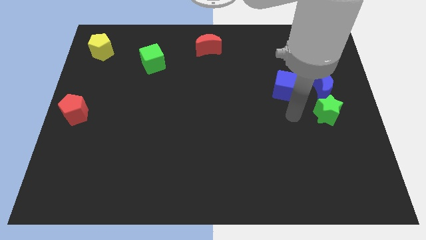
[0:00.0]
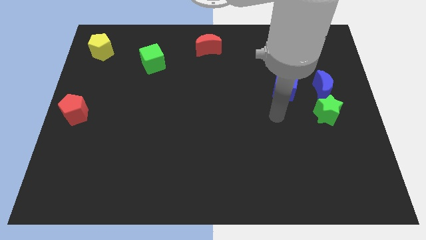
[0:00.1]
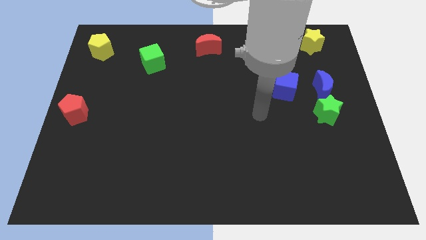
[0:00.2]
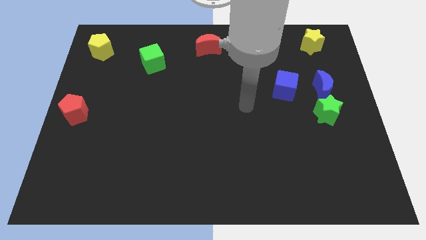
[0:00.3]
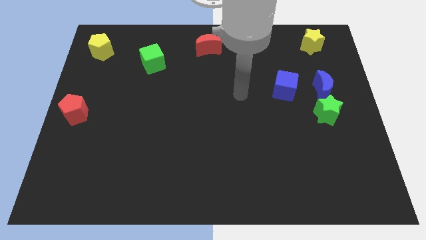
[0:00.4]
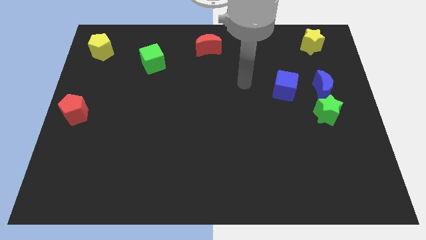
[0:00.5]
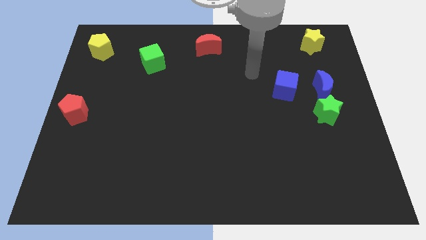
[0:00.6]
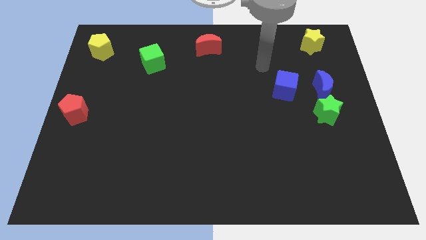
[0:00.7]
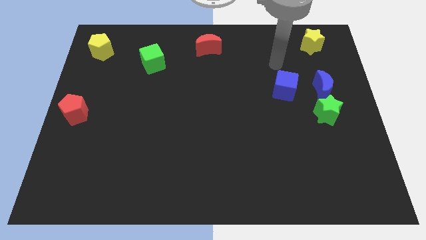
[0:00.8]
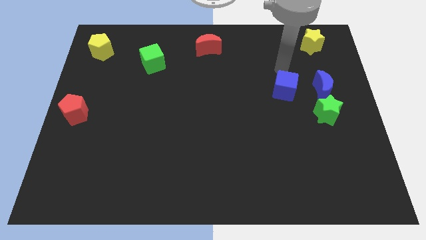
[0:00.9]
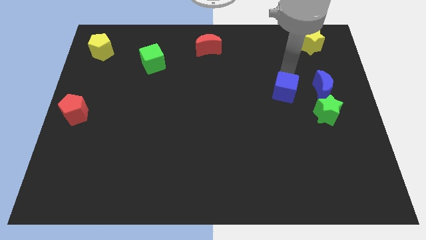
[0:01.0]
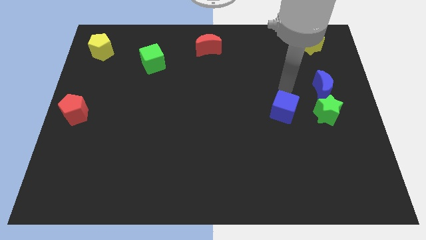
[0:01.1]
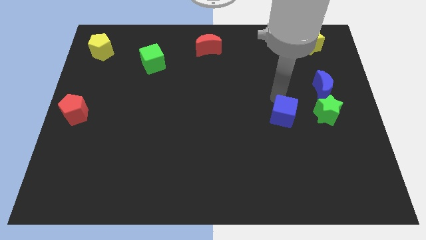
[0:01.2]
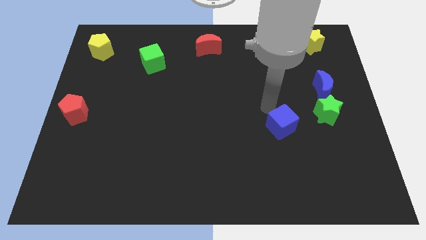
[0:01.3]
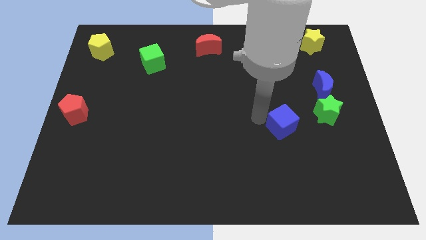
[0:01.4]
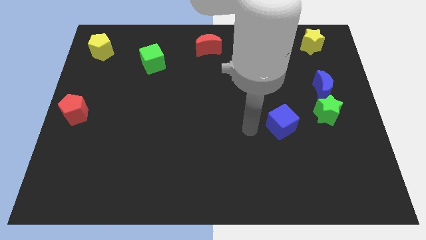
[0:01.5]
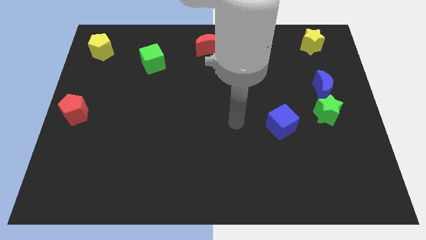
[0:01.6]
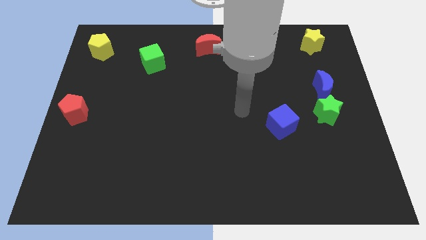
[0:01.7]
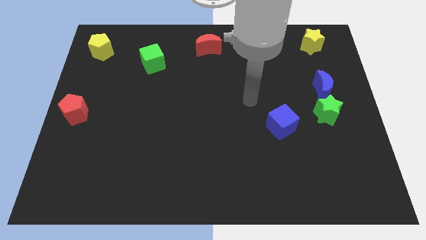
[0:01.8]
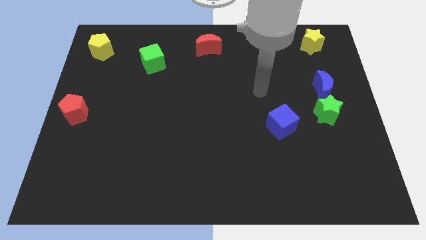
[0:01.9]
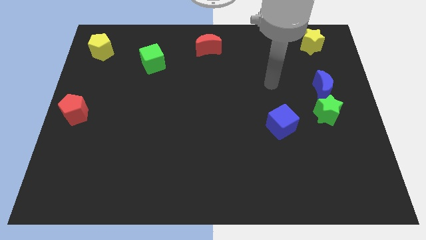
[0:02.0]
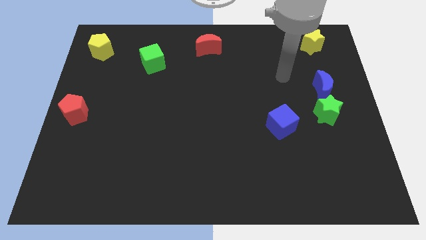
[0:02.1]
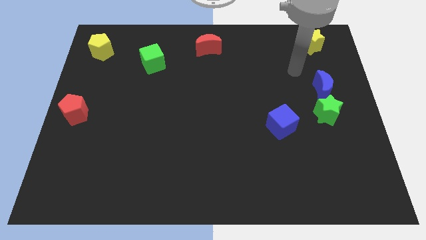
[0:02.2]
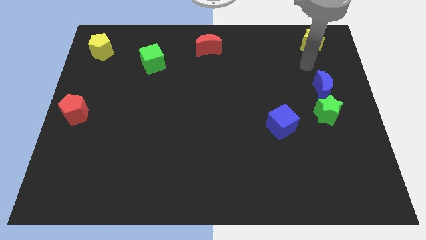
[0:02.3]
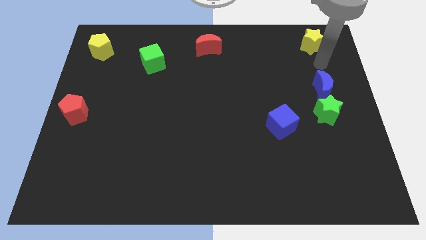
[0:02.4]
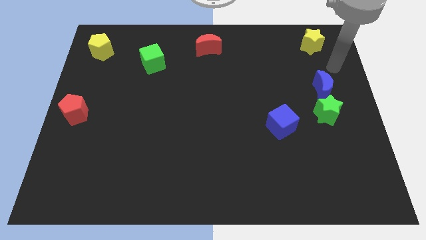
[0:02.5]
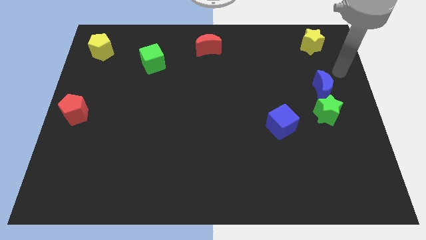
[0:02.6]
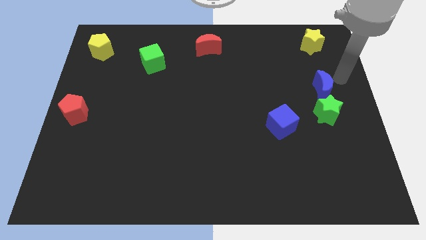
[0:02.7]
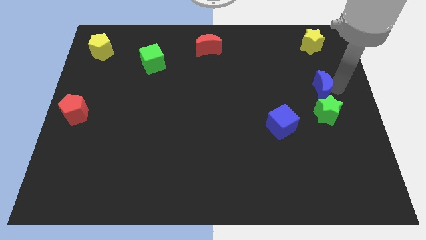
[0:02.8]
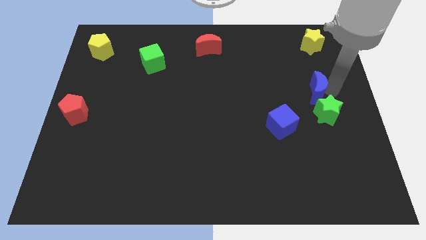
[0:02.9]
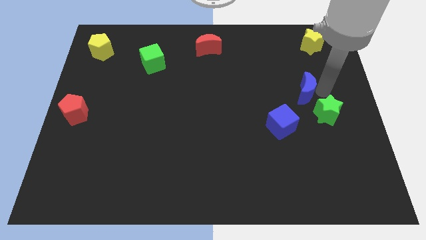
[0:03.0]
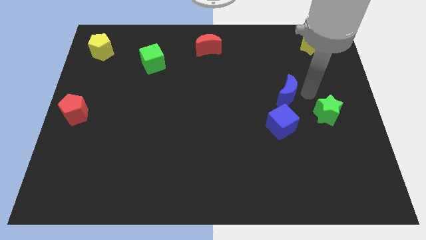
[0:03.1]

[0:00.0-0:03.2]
move the blue crescent above the blue cube

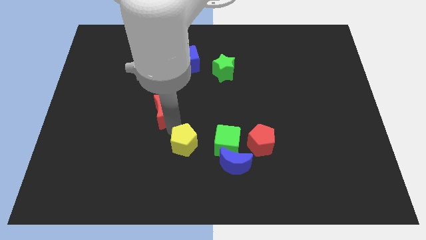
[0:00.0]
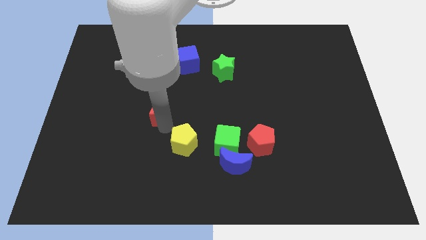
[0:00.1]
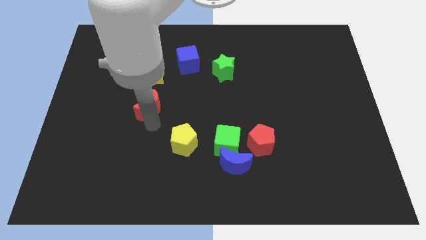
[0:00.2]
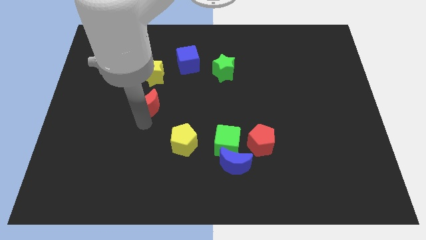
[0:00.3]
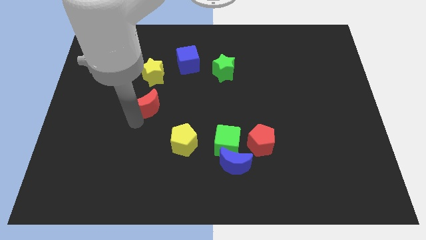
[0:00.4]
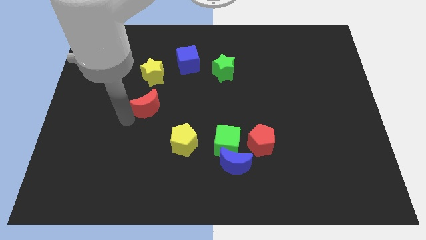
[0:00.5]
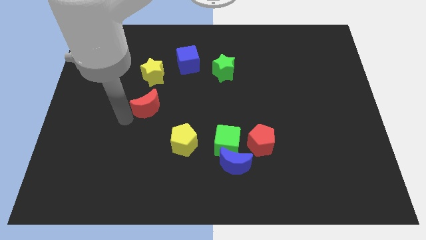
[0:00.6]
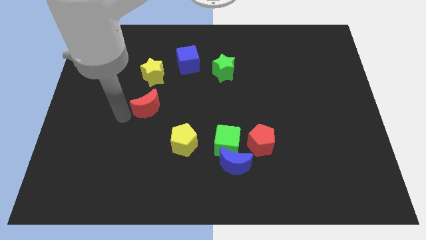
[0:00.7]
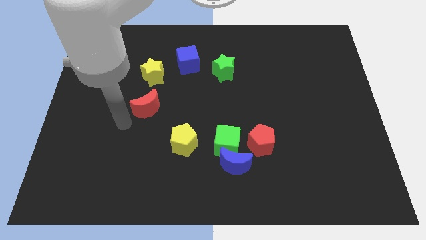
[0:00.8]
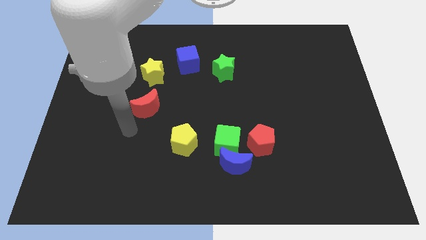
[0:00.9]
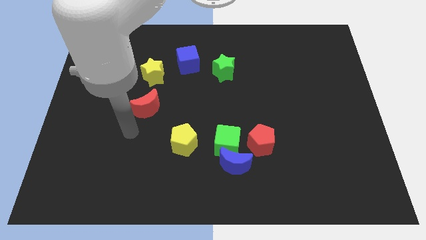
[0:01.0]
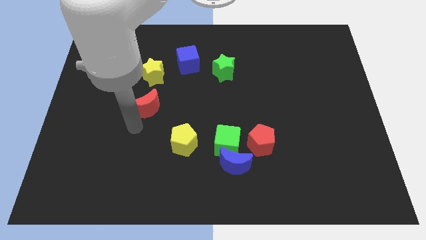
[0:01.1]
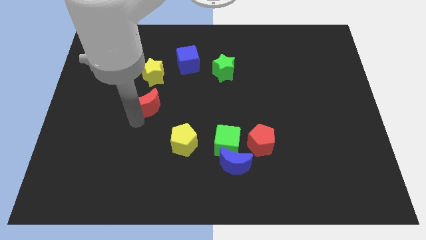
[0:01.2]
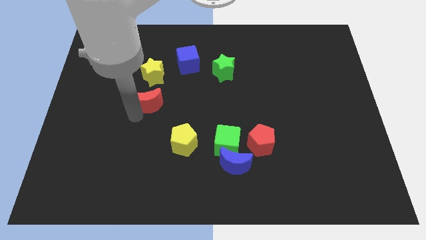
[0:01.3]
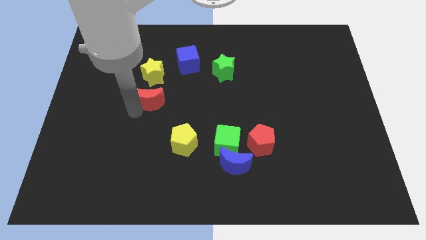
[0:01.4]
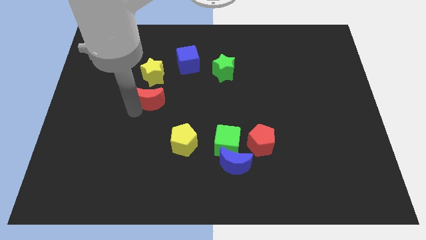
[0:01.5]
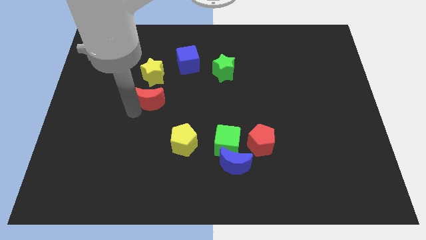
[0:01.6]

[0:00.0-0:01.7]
place the red moon down to the yellow star

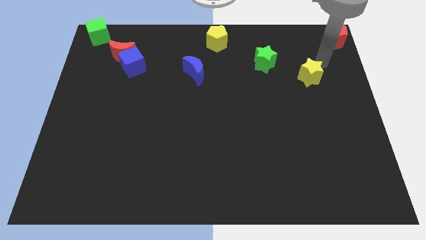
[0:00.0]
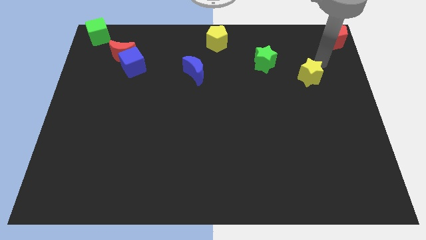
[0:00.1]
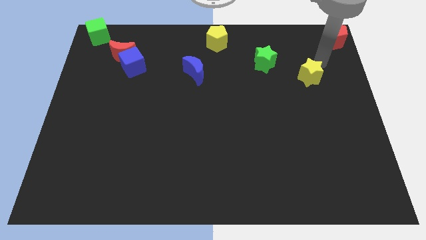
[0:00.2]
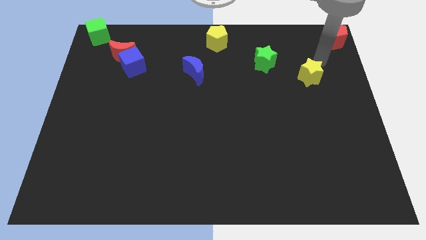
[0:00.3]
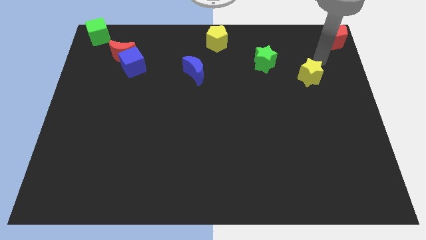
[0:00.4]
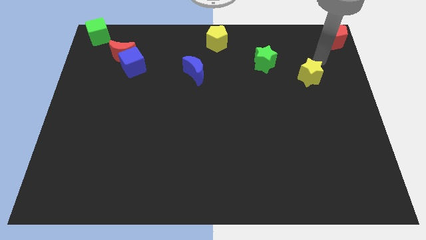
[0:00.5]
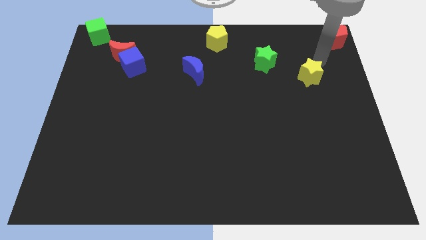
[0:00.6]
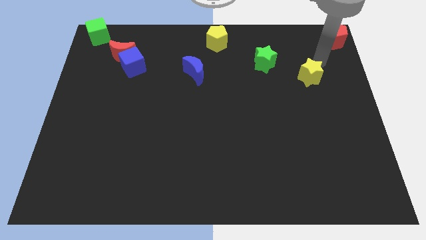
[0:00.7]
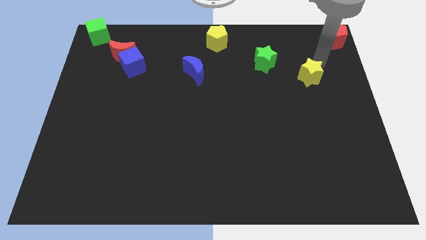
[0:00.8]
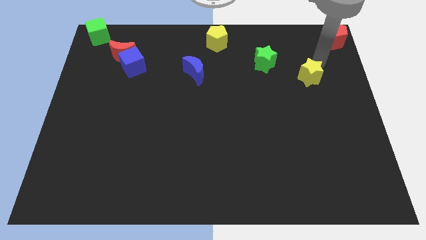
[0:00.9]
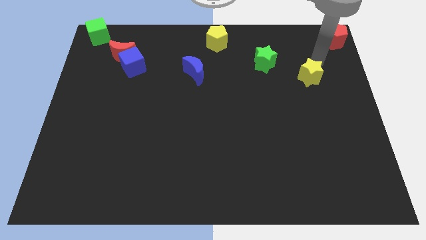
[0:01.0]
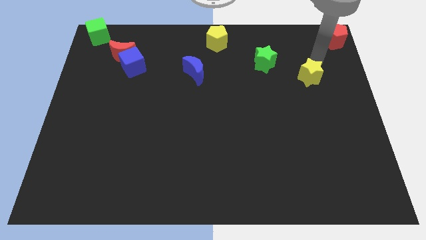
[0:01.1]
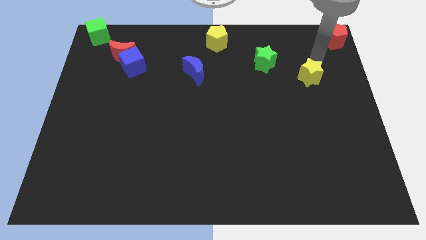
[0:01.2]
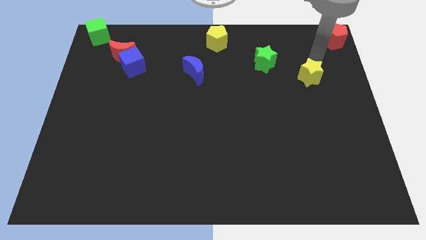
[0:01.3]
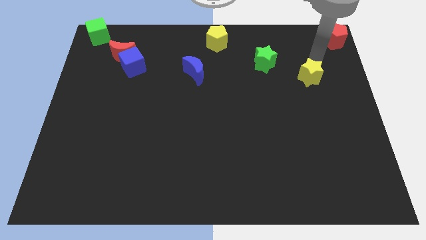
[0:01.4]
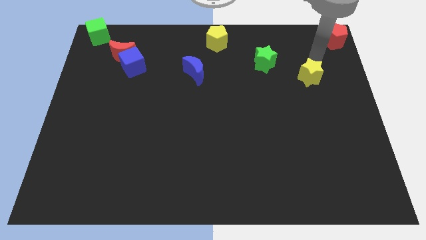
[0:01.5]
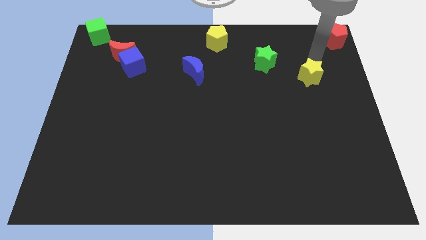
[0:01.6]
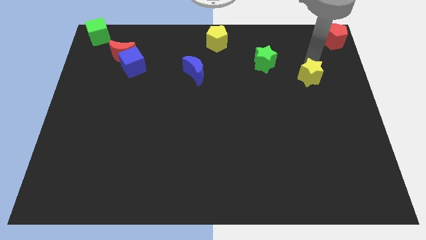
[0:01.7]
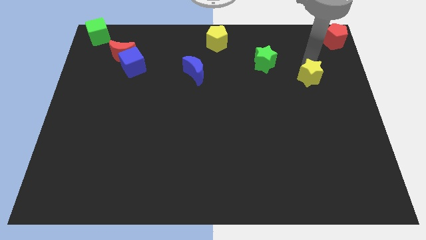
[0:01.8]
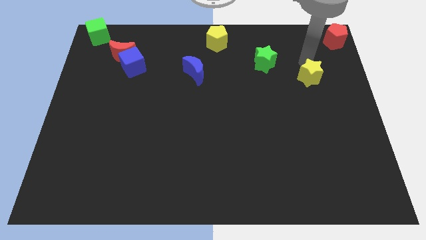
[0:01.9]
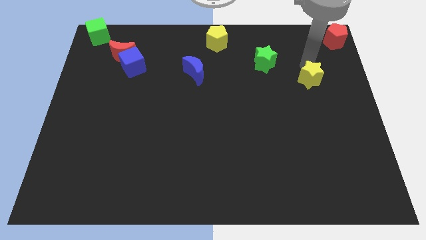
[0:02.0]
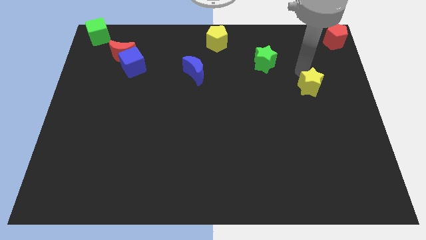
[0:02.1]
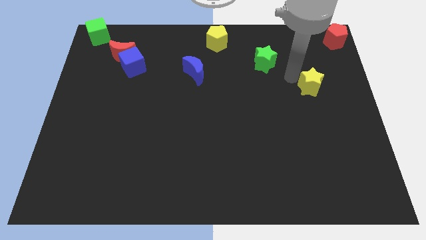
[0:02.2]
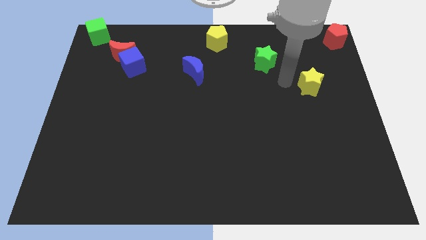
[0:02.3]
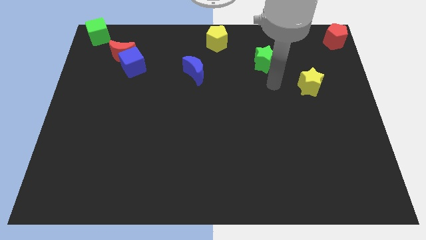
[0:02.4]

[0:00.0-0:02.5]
slightly move yellow star

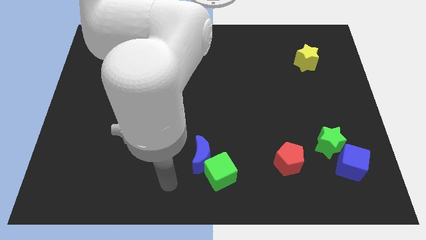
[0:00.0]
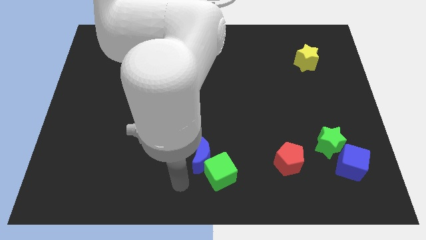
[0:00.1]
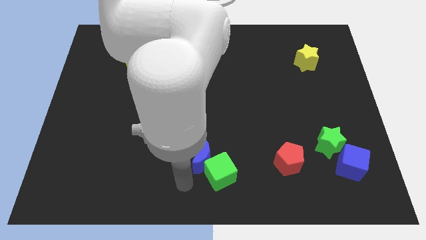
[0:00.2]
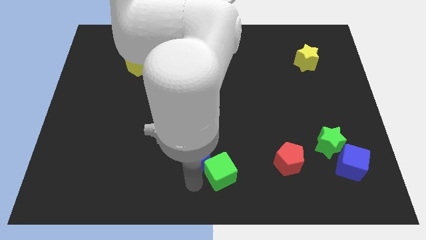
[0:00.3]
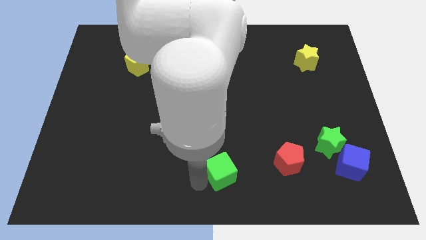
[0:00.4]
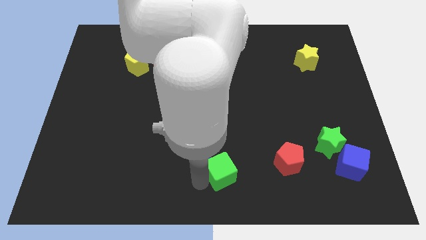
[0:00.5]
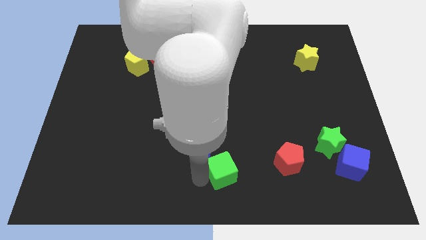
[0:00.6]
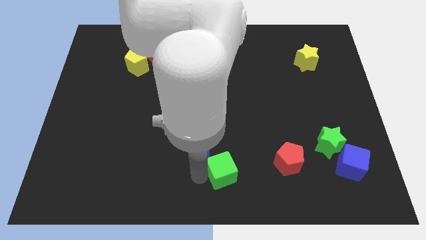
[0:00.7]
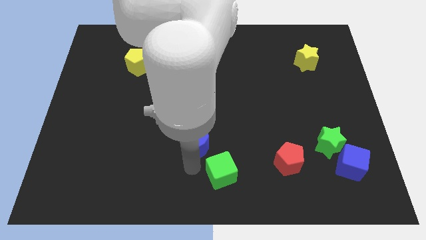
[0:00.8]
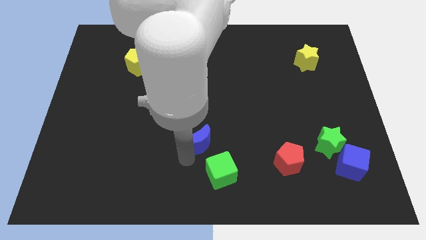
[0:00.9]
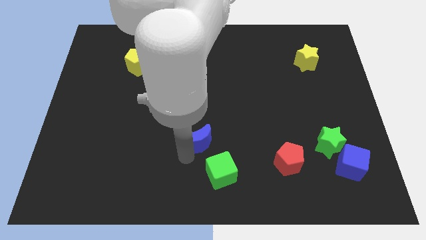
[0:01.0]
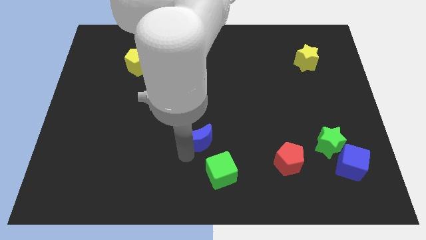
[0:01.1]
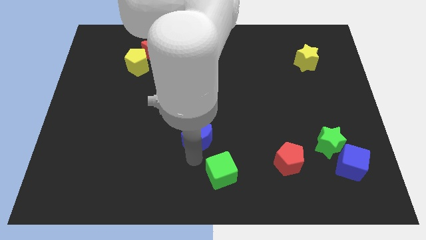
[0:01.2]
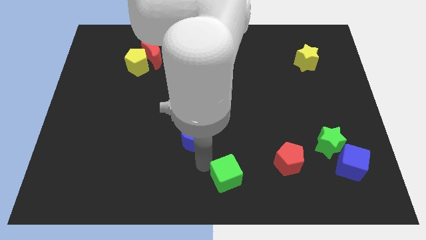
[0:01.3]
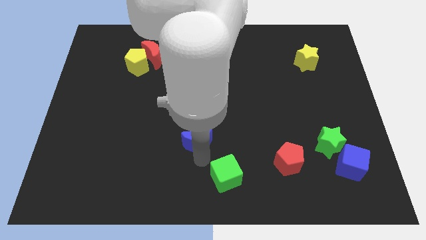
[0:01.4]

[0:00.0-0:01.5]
move the green cubeb slightly

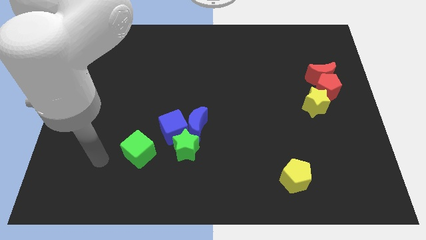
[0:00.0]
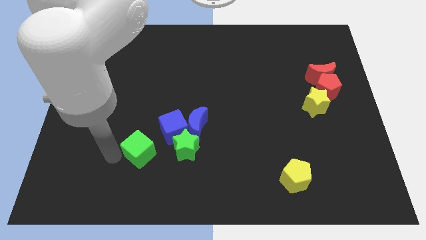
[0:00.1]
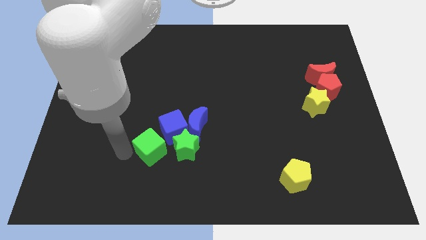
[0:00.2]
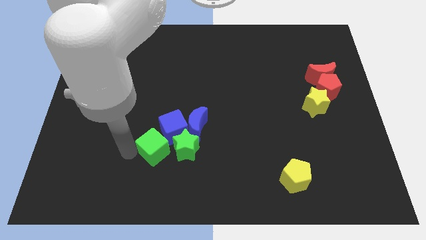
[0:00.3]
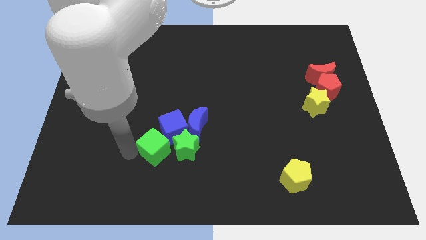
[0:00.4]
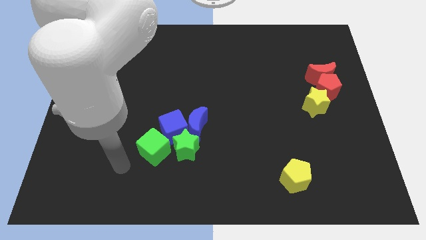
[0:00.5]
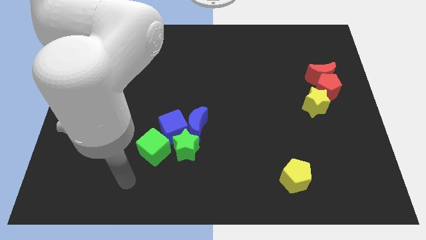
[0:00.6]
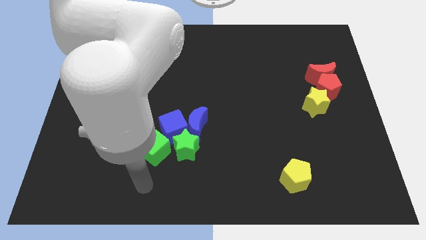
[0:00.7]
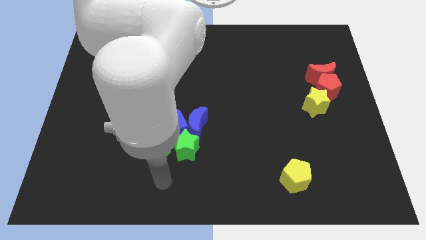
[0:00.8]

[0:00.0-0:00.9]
slide push the green cube left to the green star
